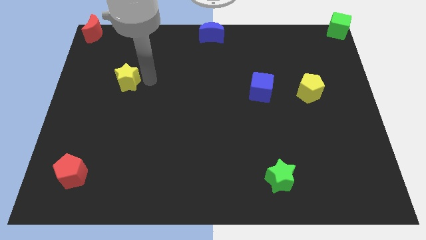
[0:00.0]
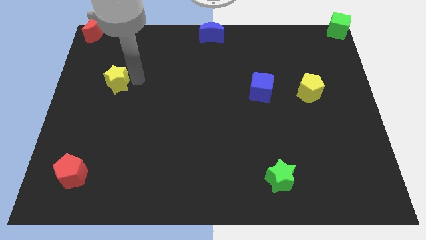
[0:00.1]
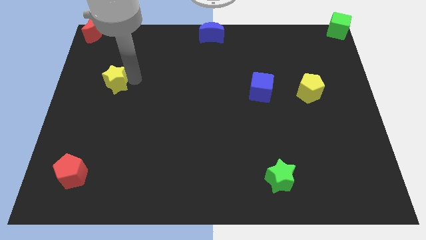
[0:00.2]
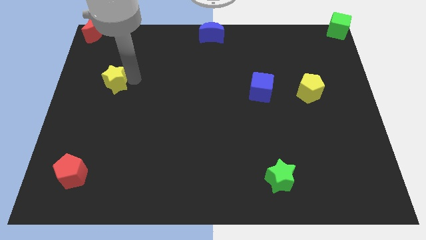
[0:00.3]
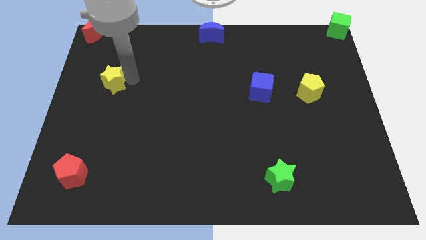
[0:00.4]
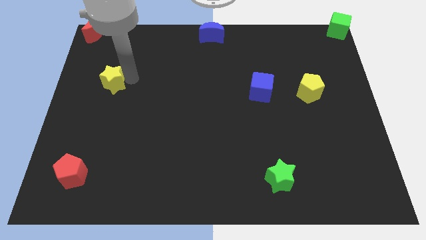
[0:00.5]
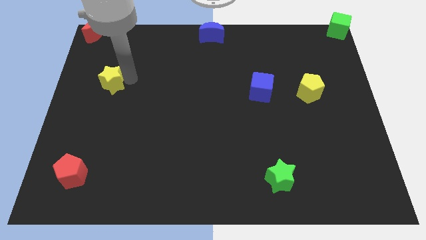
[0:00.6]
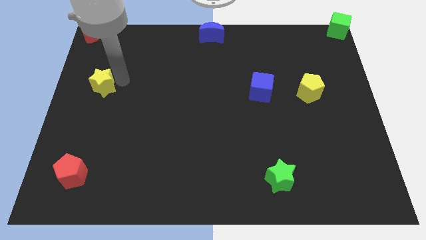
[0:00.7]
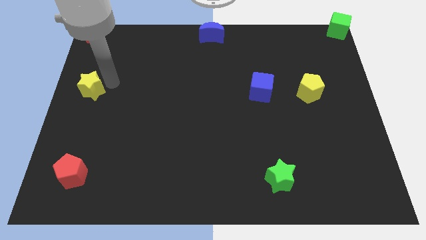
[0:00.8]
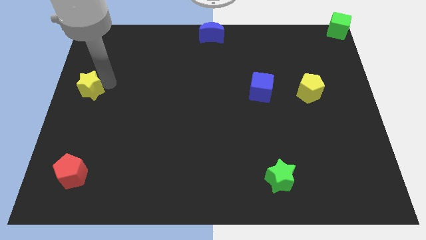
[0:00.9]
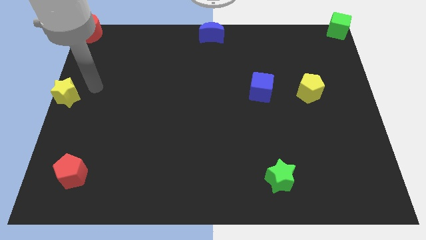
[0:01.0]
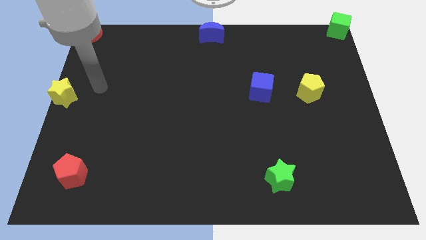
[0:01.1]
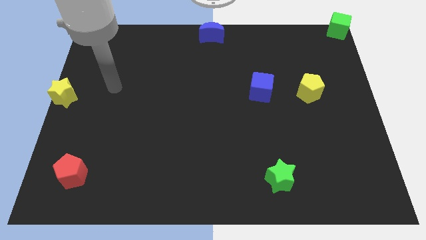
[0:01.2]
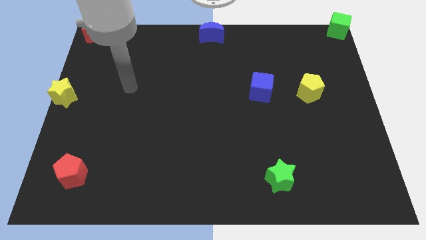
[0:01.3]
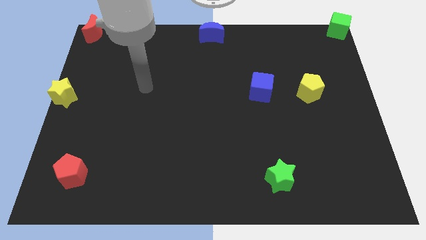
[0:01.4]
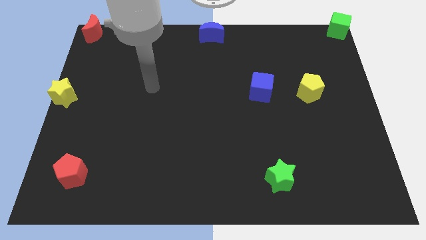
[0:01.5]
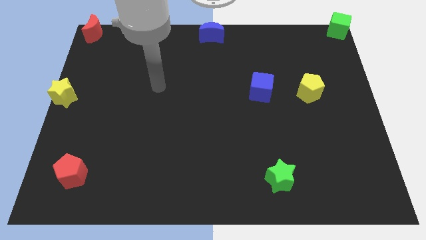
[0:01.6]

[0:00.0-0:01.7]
move the yellow star to the center left of the board

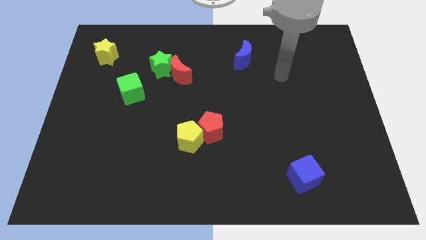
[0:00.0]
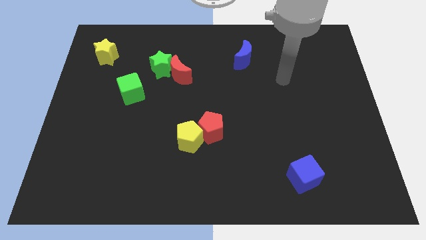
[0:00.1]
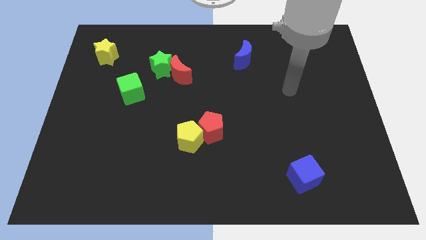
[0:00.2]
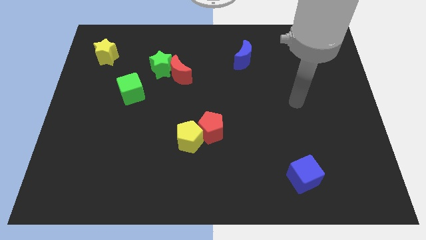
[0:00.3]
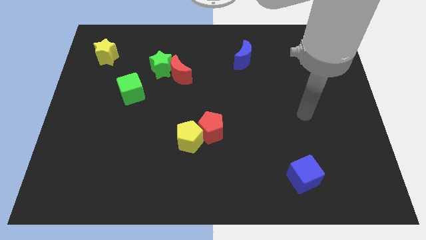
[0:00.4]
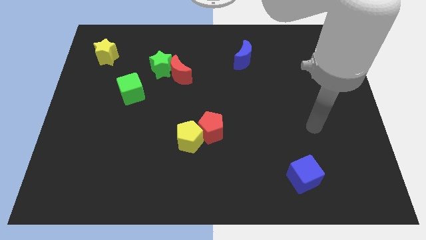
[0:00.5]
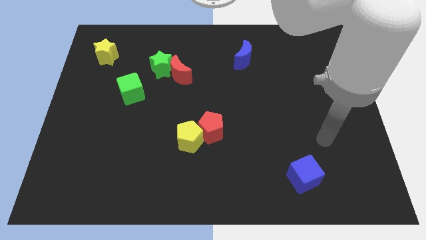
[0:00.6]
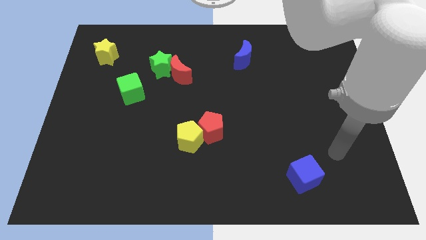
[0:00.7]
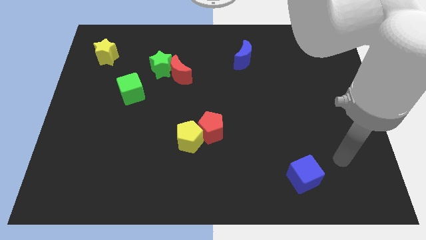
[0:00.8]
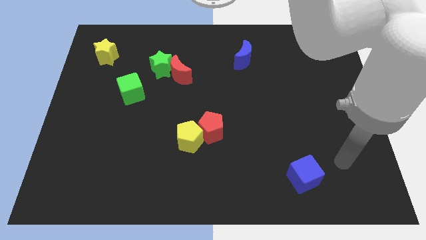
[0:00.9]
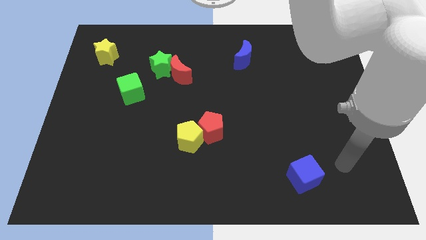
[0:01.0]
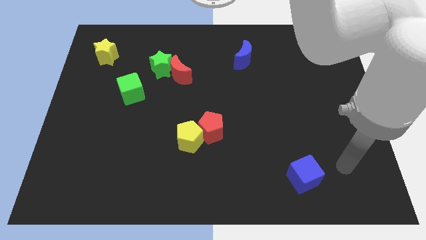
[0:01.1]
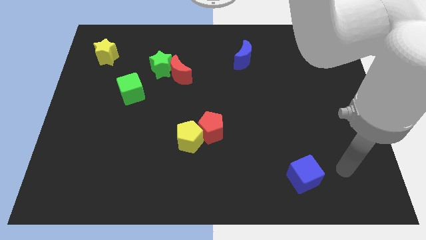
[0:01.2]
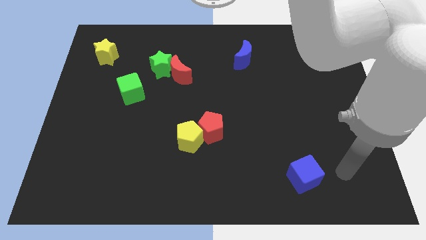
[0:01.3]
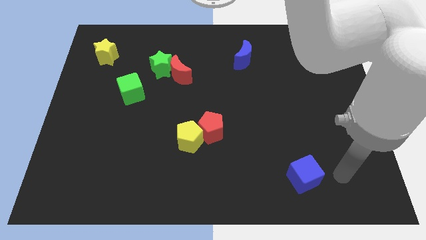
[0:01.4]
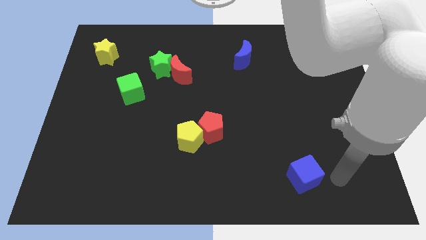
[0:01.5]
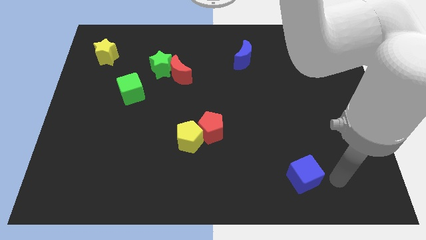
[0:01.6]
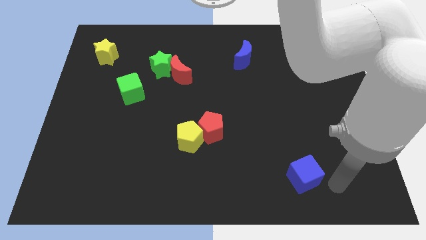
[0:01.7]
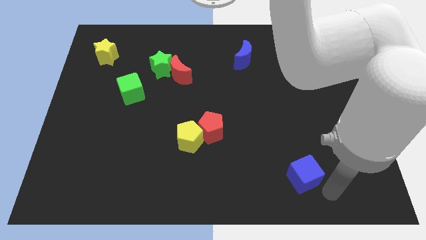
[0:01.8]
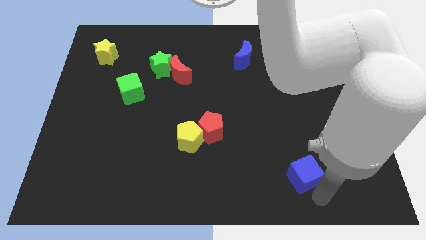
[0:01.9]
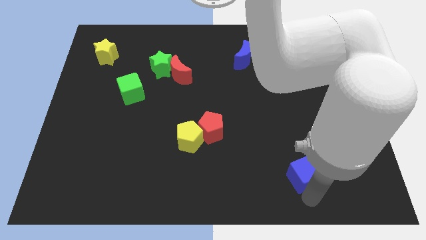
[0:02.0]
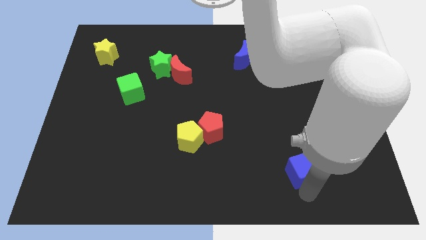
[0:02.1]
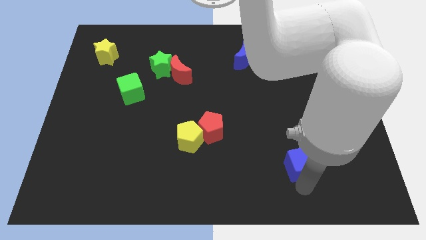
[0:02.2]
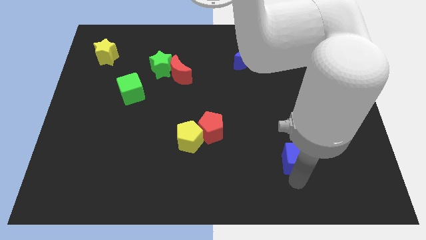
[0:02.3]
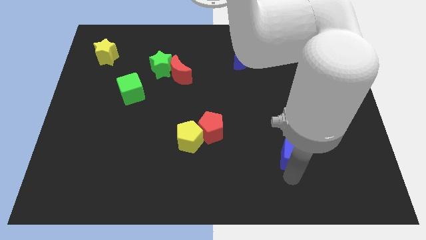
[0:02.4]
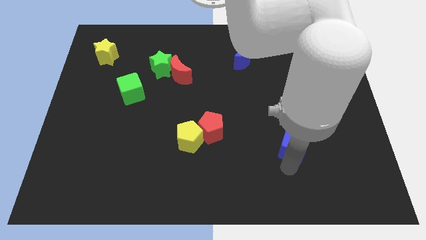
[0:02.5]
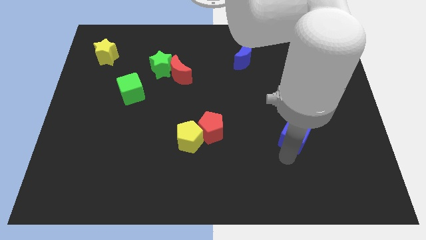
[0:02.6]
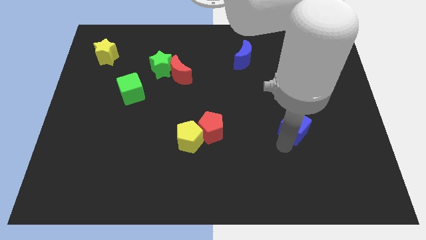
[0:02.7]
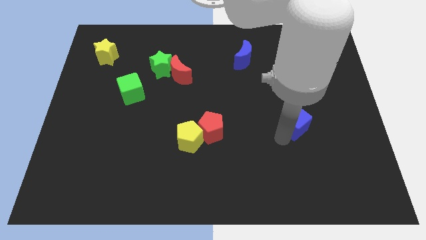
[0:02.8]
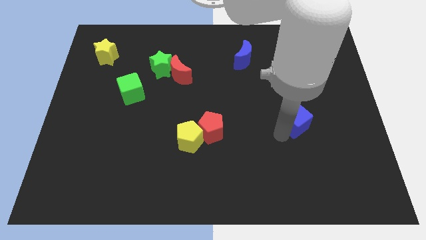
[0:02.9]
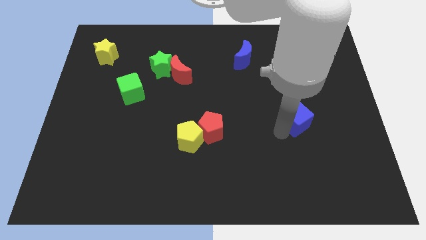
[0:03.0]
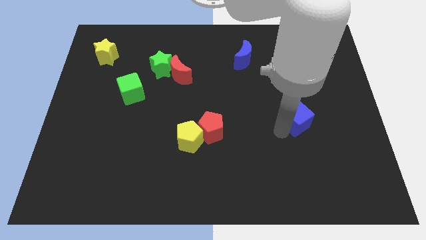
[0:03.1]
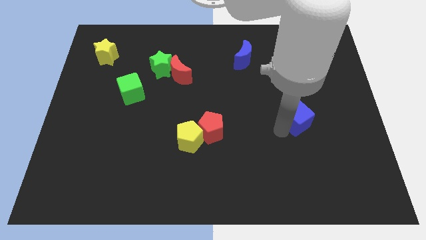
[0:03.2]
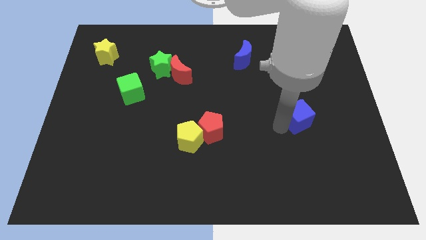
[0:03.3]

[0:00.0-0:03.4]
place the blue cube right to the red pentagon

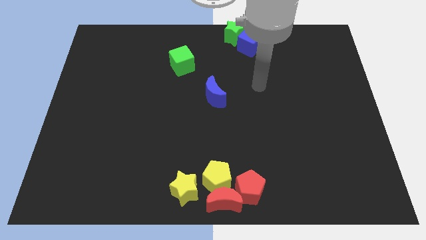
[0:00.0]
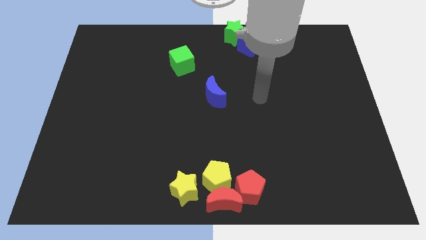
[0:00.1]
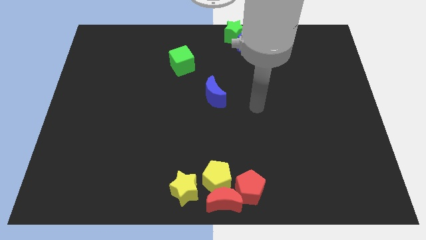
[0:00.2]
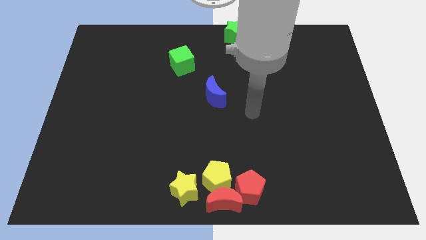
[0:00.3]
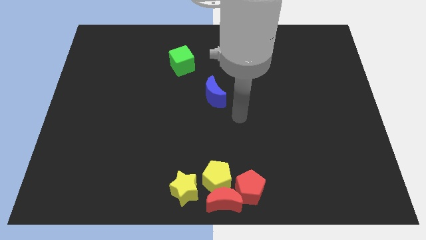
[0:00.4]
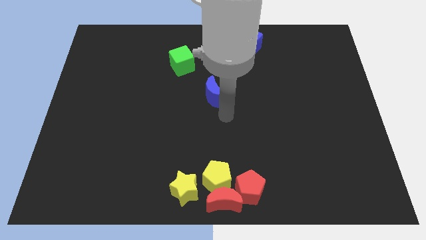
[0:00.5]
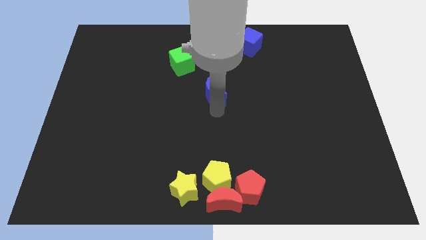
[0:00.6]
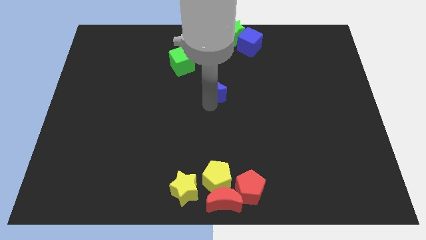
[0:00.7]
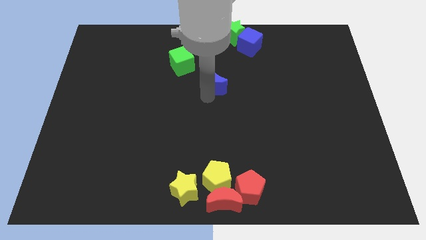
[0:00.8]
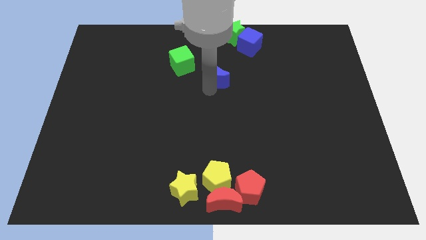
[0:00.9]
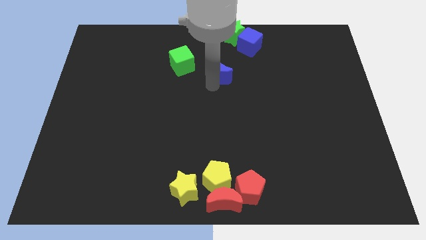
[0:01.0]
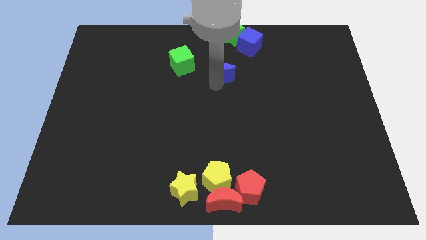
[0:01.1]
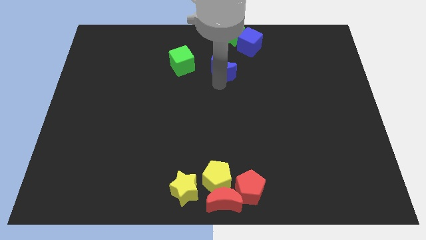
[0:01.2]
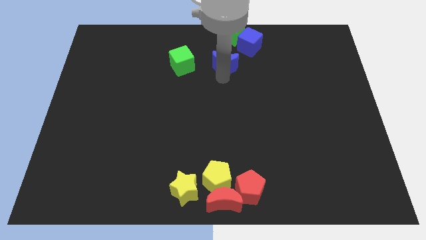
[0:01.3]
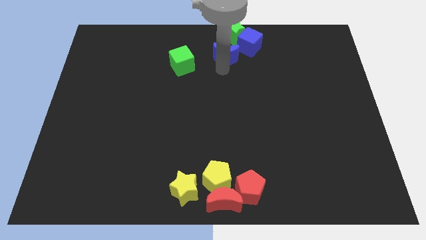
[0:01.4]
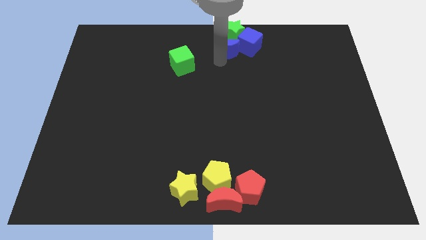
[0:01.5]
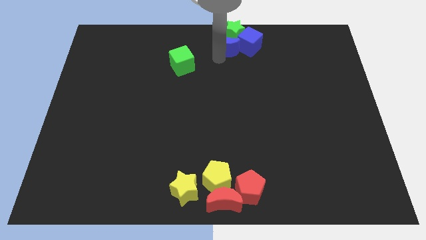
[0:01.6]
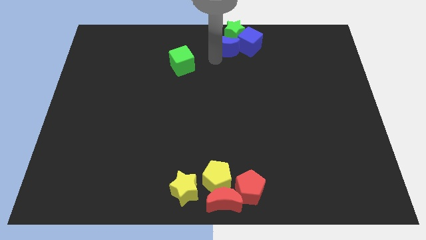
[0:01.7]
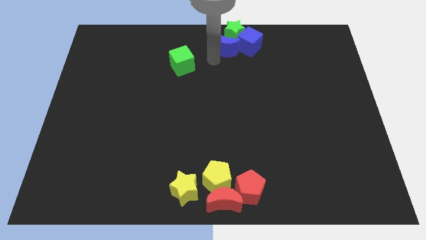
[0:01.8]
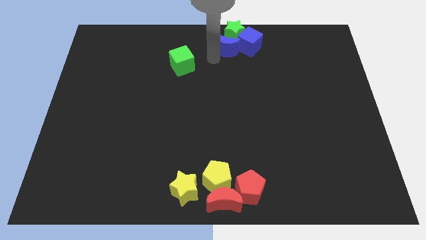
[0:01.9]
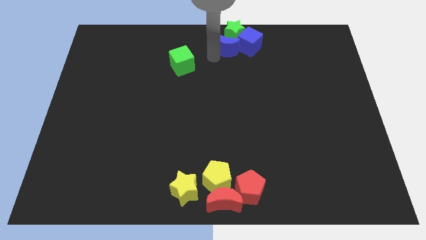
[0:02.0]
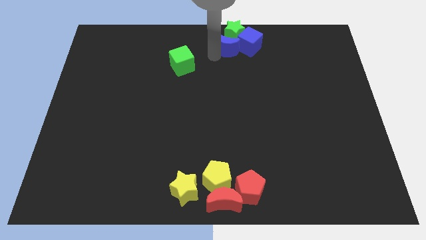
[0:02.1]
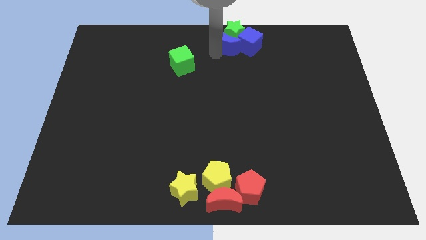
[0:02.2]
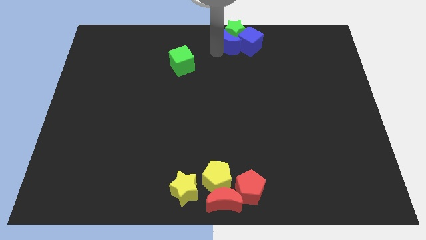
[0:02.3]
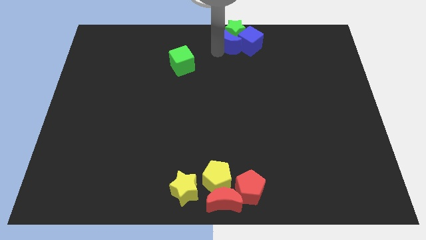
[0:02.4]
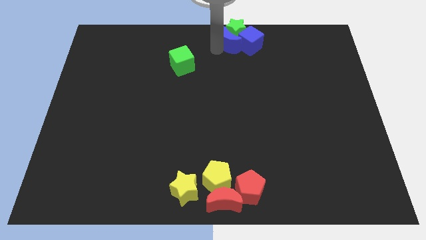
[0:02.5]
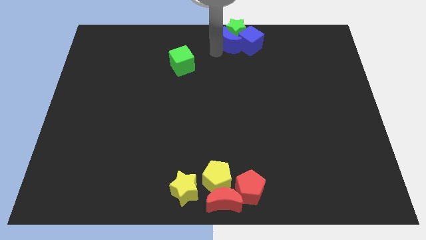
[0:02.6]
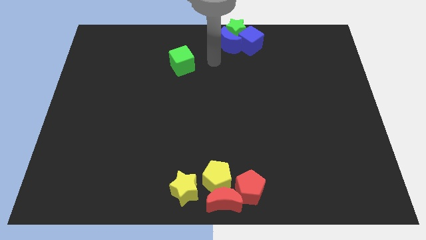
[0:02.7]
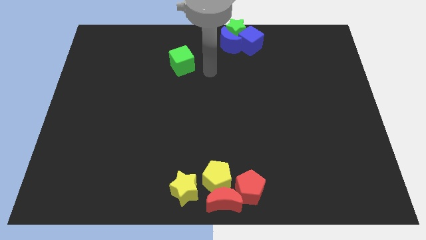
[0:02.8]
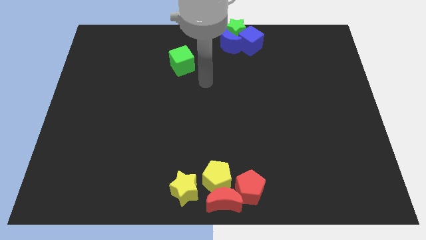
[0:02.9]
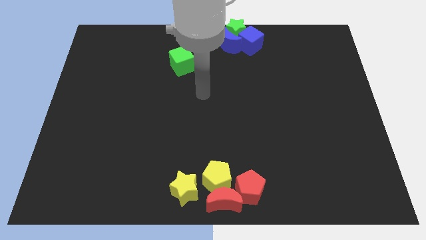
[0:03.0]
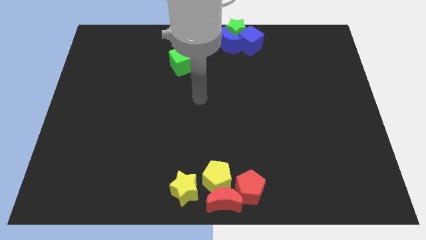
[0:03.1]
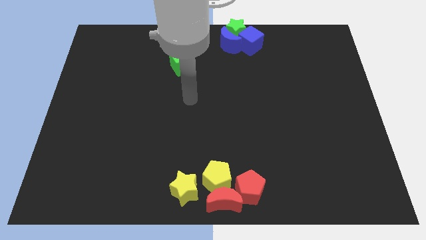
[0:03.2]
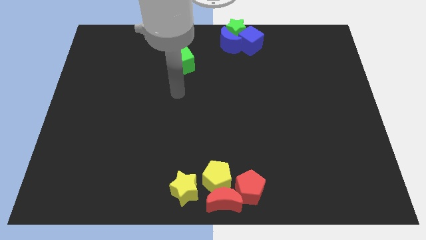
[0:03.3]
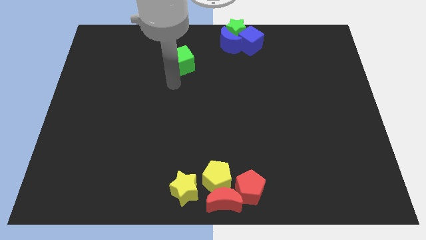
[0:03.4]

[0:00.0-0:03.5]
push the blue crescent into the green star and blue cube
